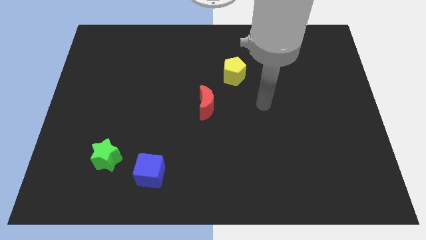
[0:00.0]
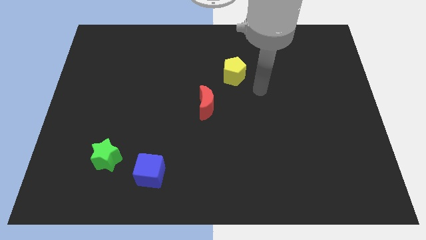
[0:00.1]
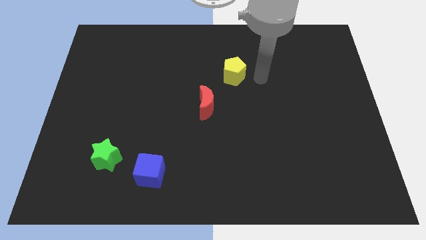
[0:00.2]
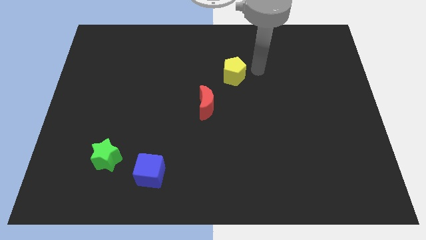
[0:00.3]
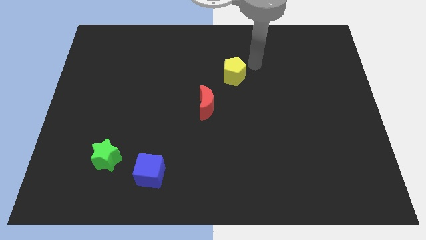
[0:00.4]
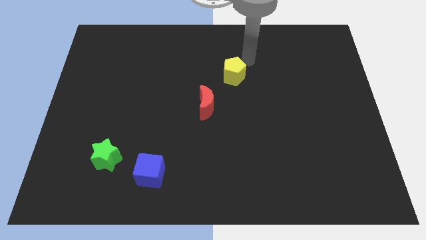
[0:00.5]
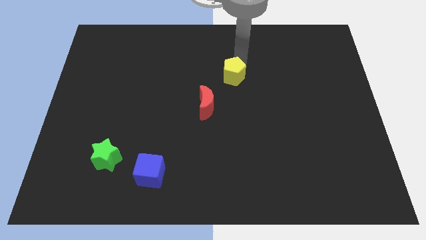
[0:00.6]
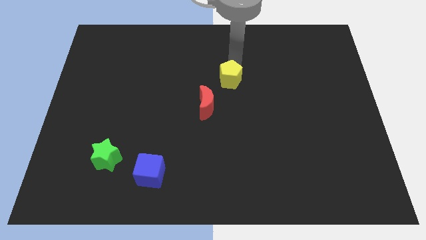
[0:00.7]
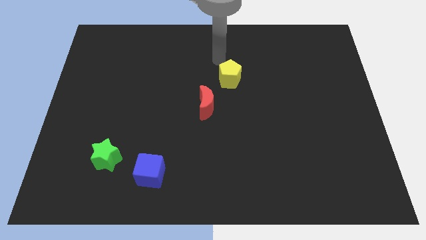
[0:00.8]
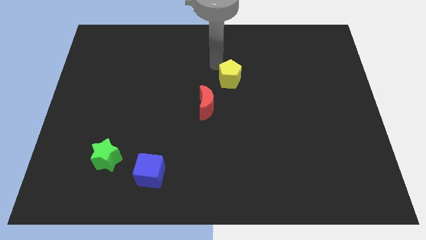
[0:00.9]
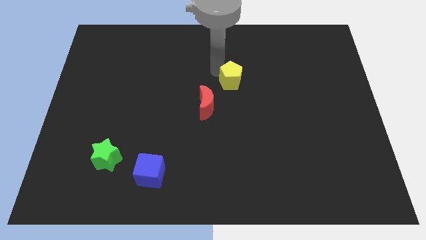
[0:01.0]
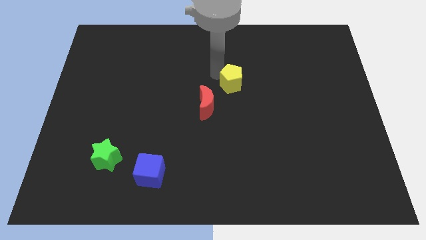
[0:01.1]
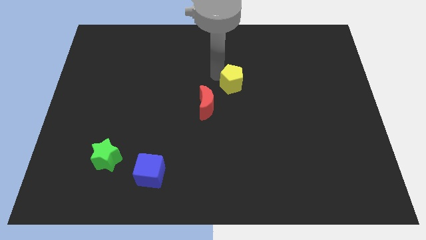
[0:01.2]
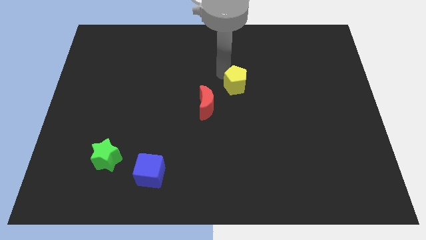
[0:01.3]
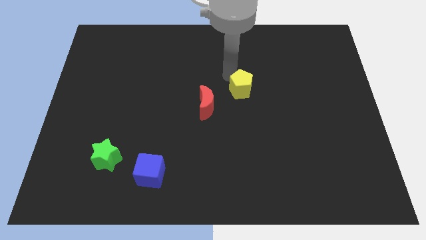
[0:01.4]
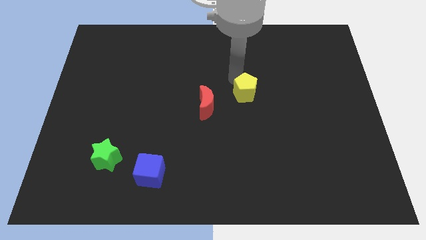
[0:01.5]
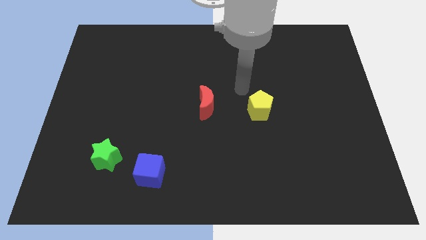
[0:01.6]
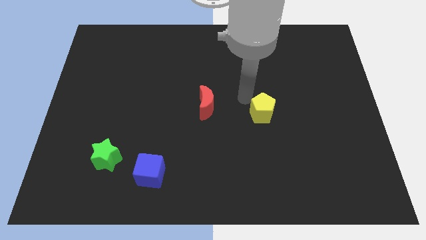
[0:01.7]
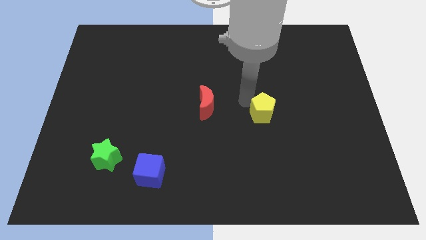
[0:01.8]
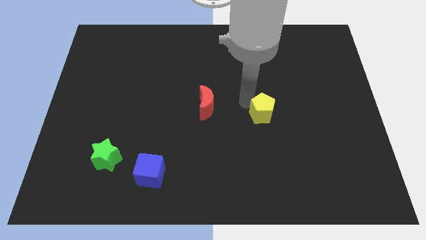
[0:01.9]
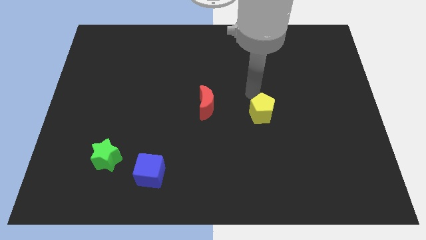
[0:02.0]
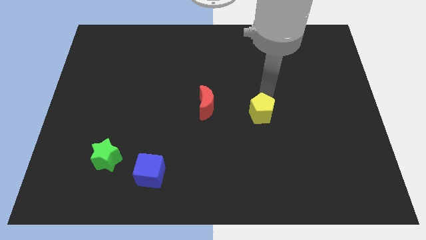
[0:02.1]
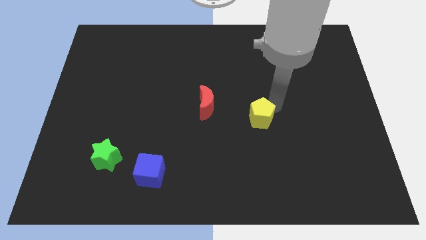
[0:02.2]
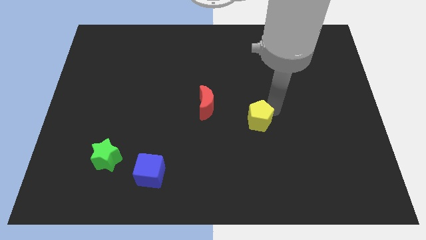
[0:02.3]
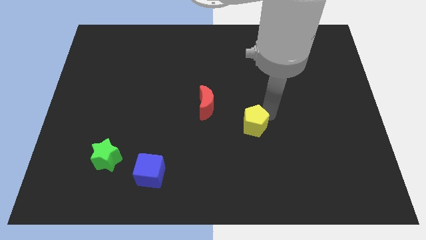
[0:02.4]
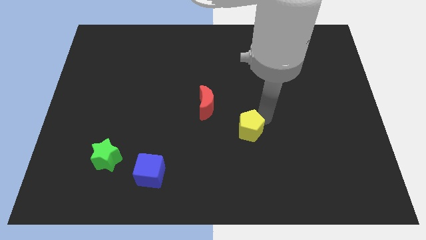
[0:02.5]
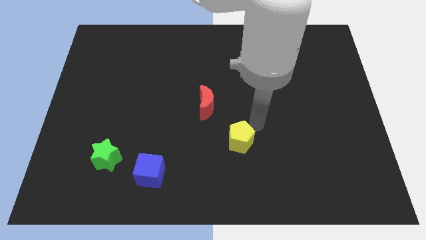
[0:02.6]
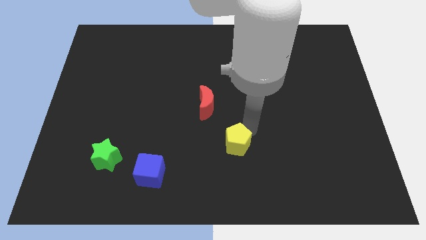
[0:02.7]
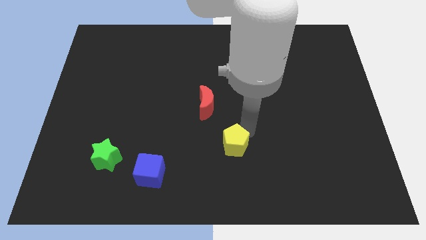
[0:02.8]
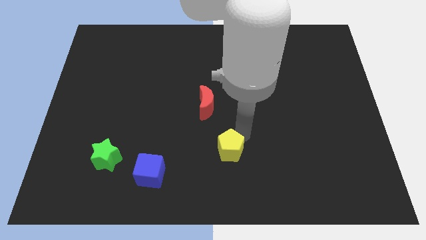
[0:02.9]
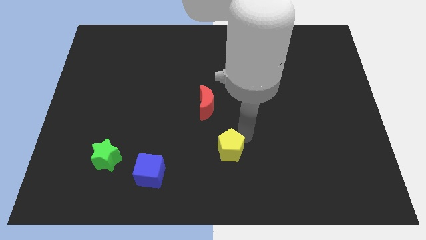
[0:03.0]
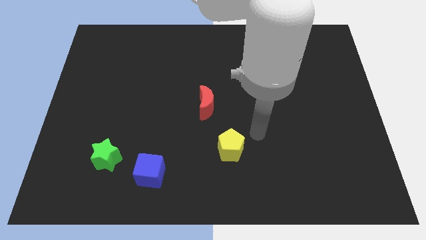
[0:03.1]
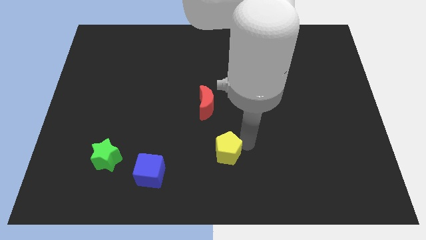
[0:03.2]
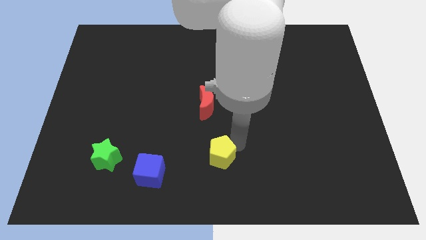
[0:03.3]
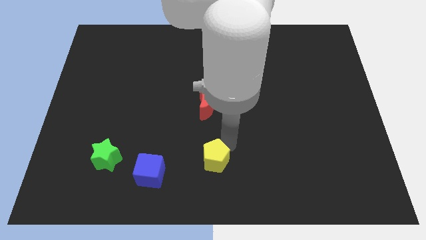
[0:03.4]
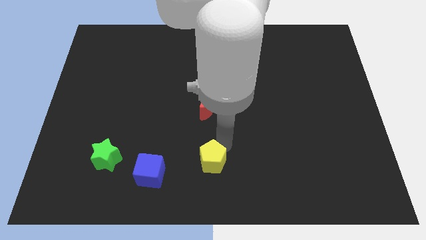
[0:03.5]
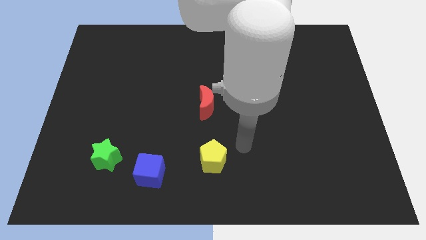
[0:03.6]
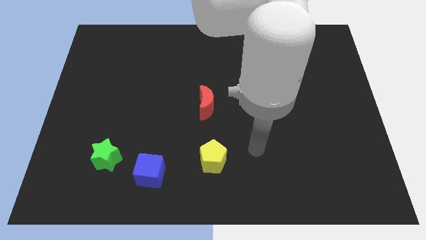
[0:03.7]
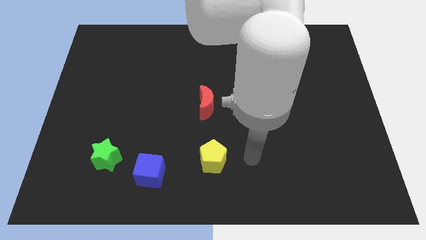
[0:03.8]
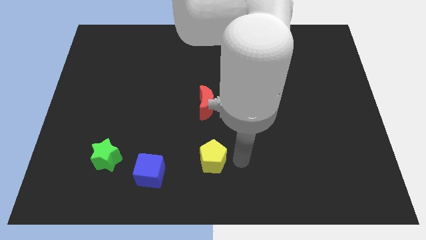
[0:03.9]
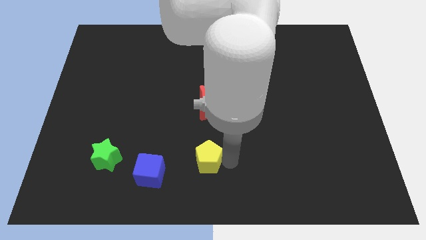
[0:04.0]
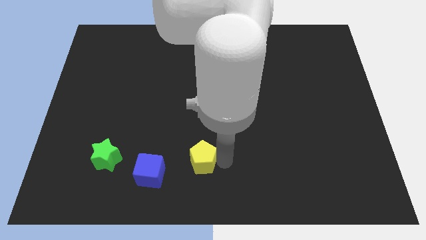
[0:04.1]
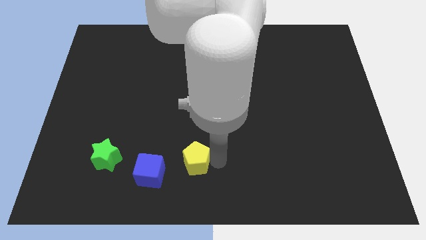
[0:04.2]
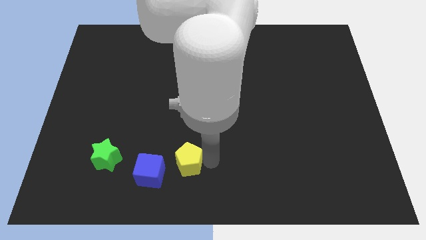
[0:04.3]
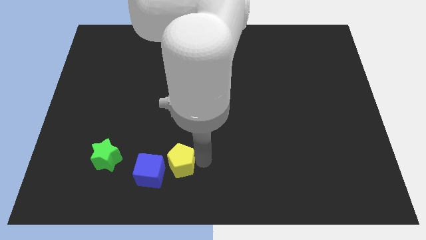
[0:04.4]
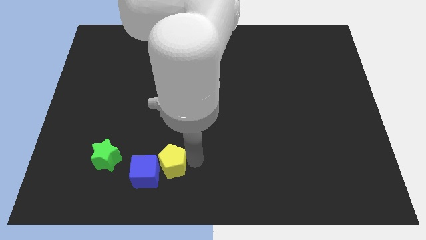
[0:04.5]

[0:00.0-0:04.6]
slide the pentagon next to the blue cube

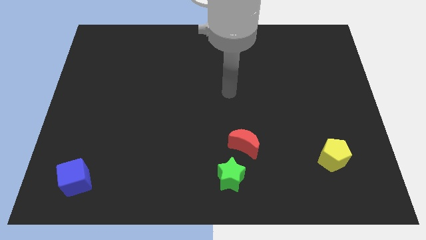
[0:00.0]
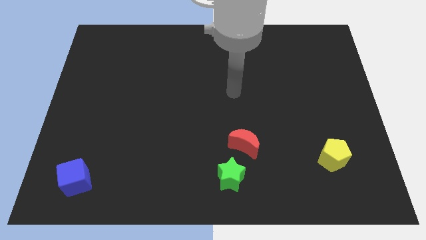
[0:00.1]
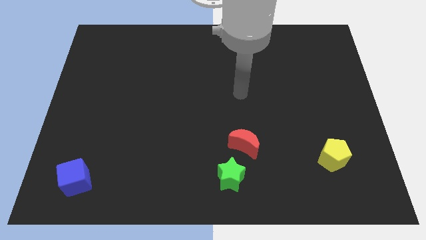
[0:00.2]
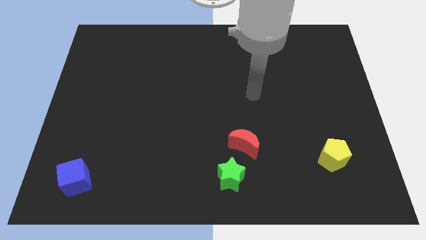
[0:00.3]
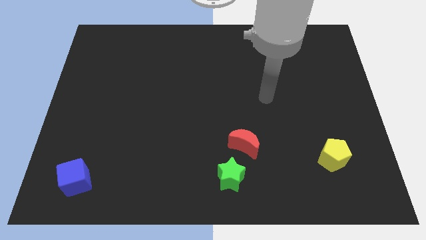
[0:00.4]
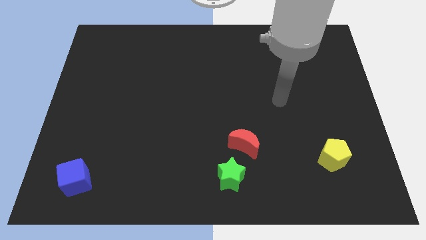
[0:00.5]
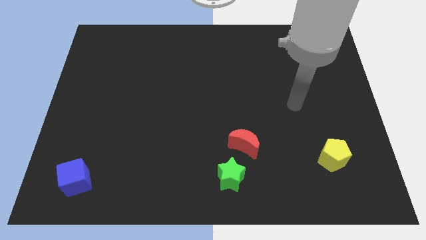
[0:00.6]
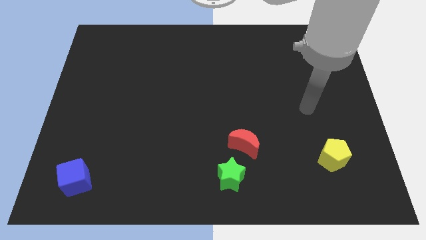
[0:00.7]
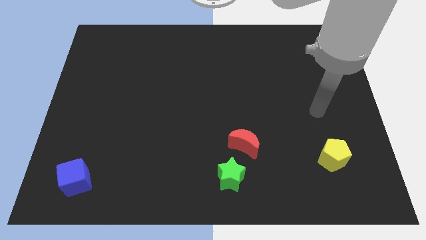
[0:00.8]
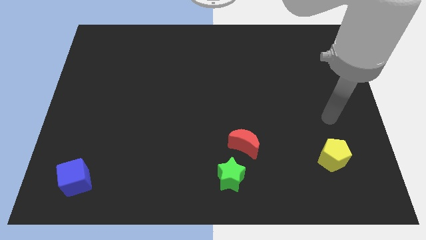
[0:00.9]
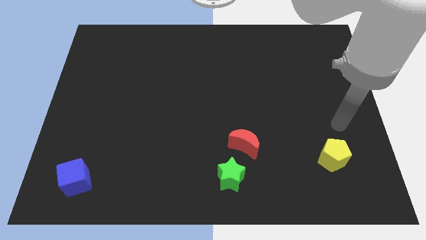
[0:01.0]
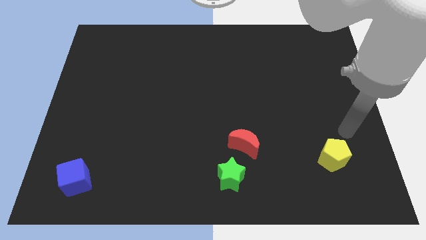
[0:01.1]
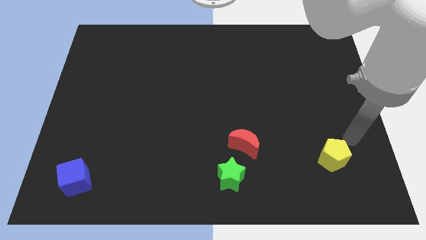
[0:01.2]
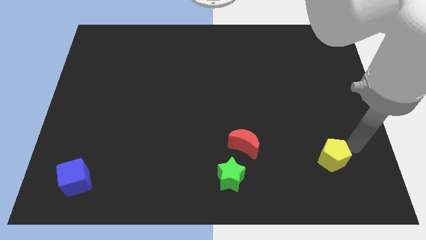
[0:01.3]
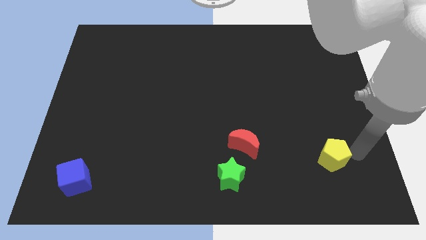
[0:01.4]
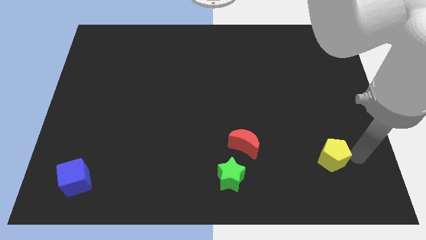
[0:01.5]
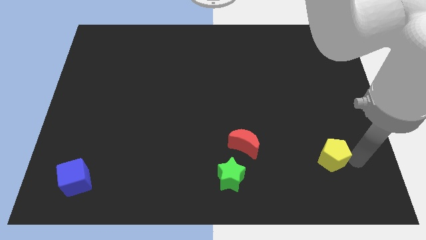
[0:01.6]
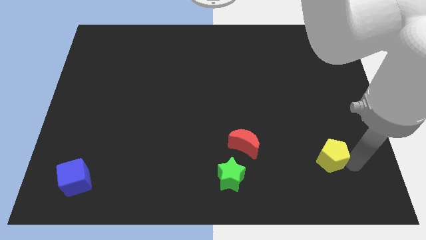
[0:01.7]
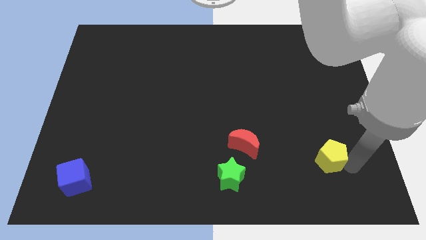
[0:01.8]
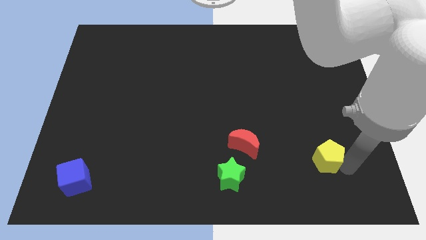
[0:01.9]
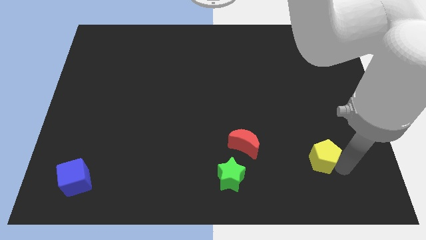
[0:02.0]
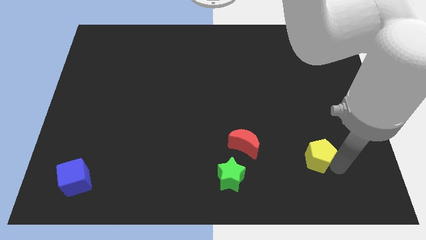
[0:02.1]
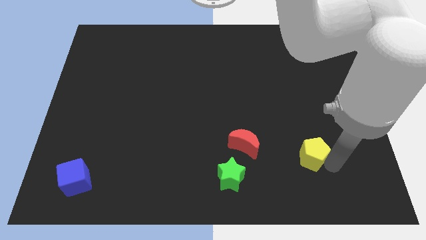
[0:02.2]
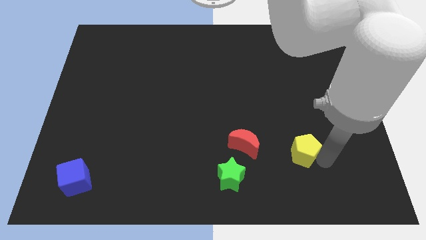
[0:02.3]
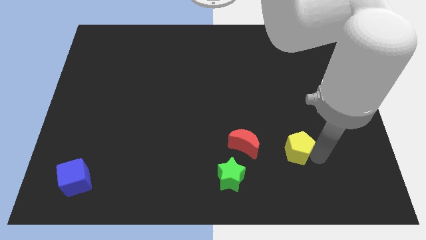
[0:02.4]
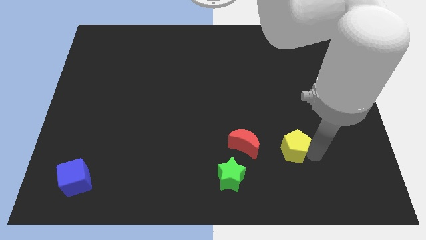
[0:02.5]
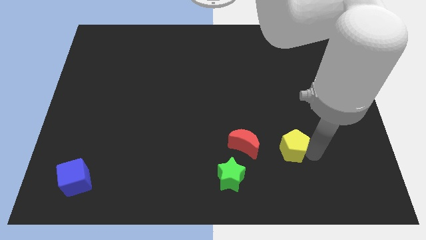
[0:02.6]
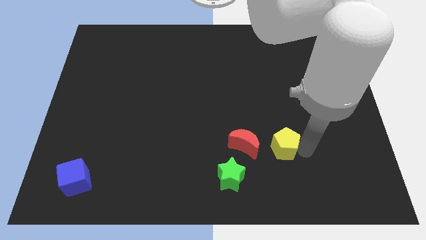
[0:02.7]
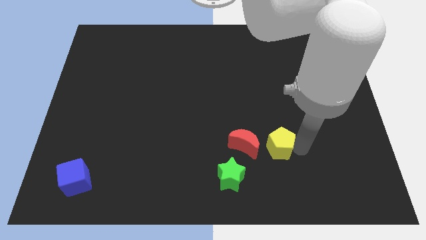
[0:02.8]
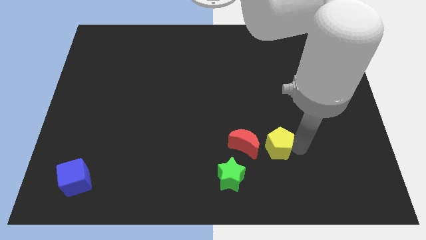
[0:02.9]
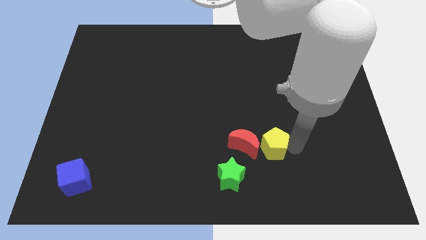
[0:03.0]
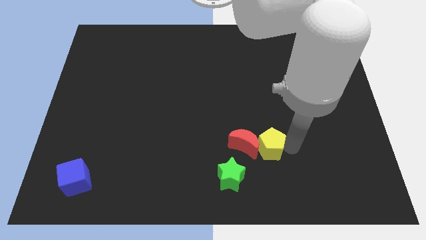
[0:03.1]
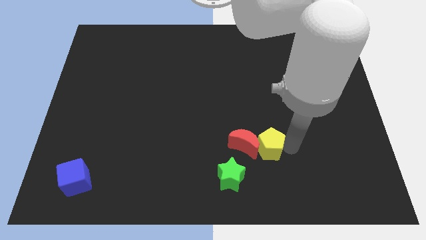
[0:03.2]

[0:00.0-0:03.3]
slide the yellow pentagon next to the red moon
